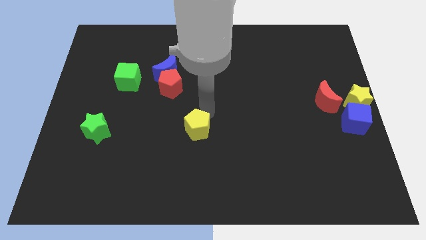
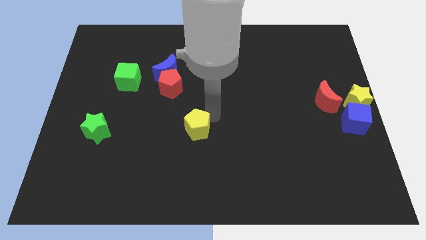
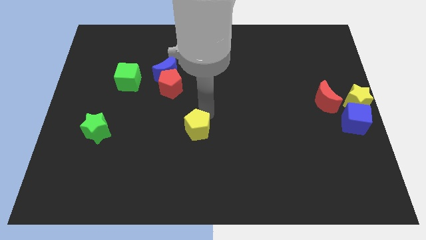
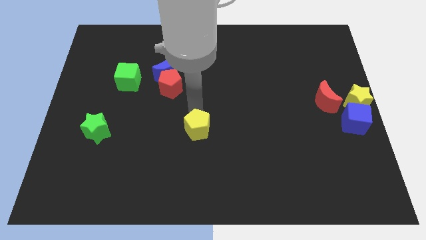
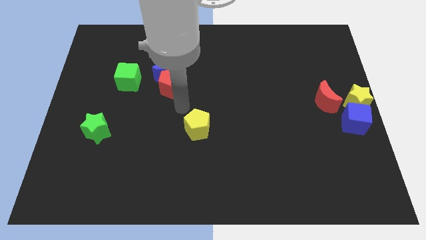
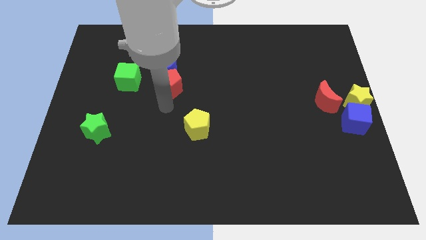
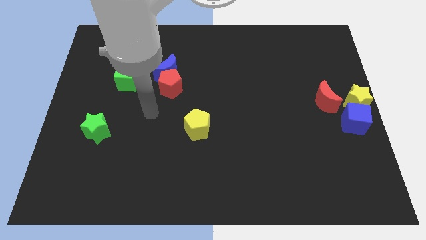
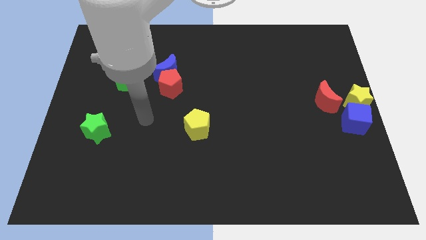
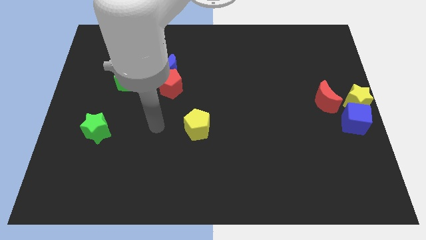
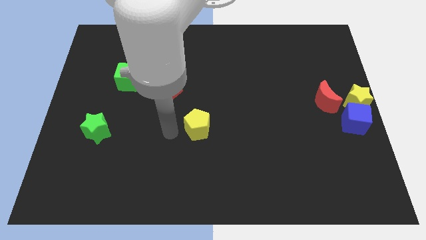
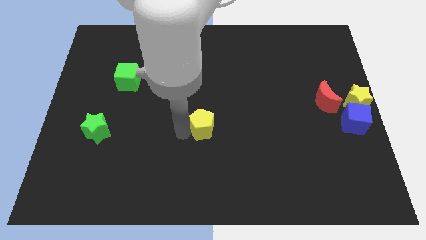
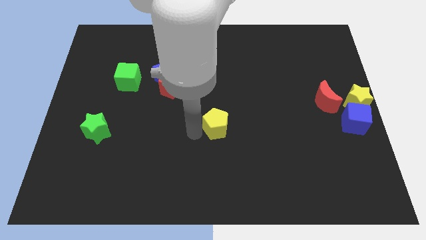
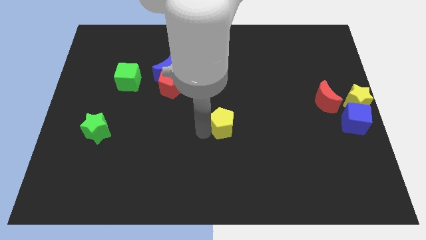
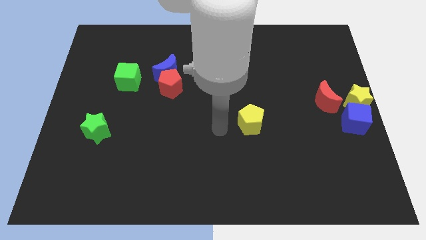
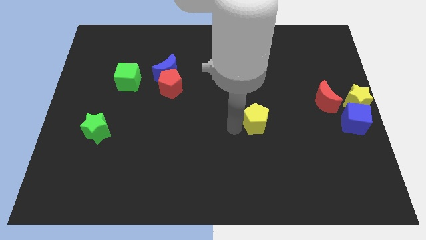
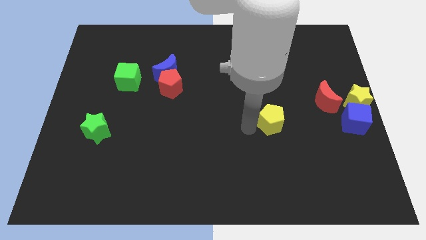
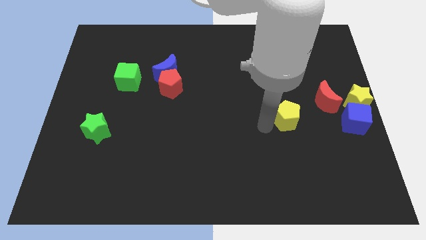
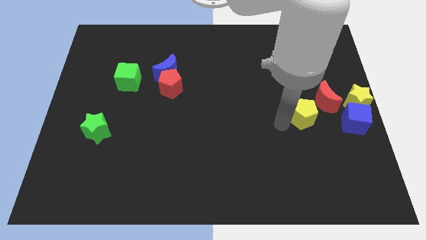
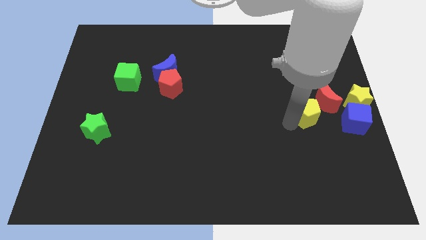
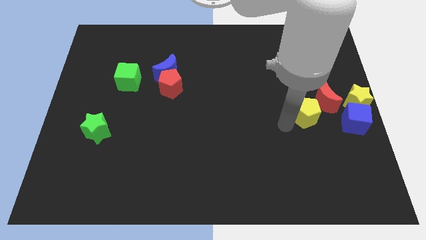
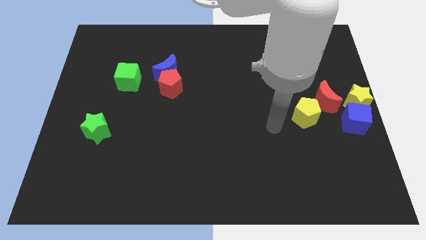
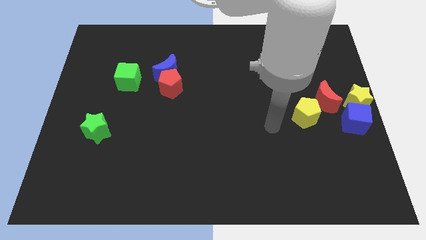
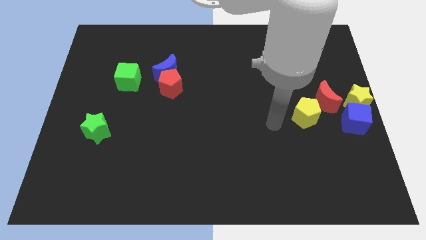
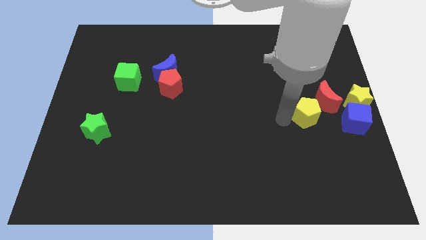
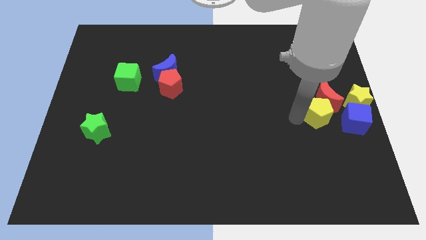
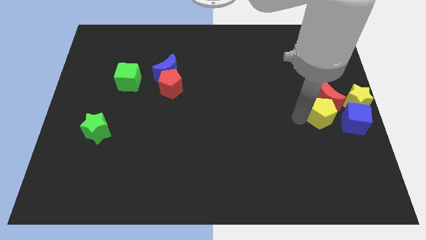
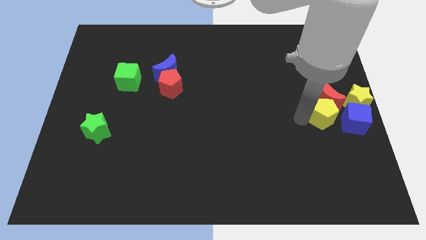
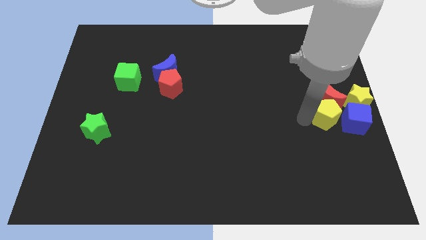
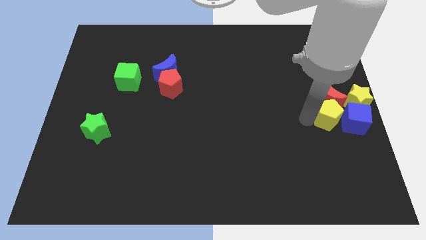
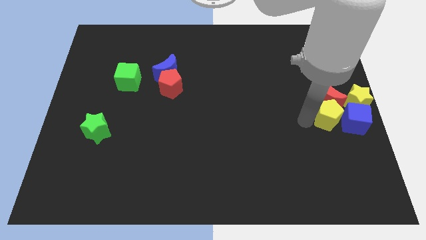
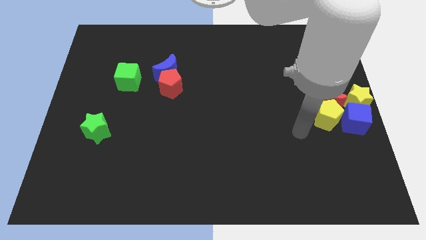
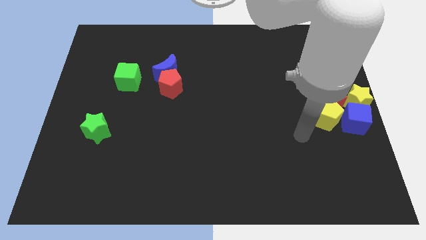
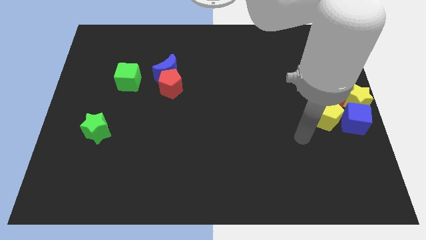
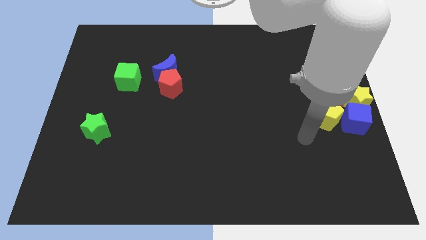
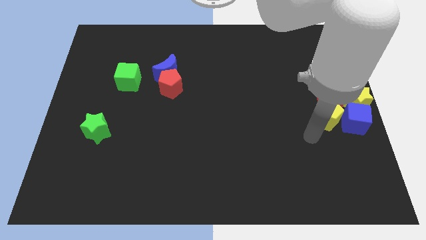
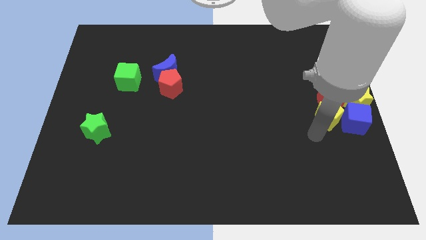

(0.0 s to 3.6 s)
push the yellow pentagon into the red crescent

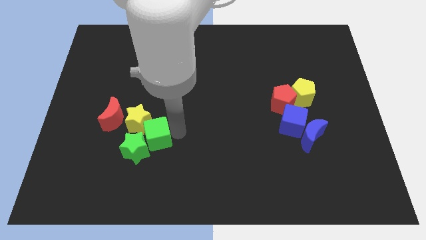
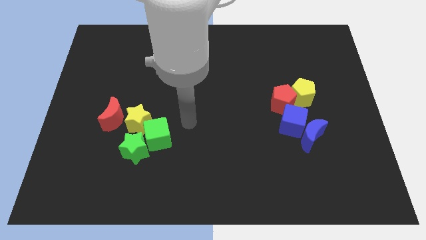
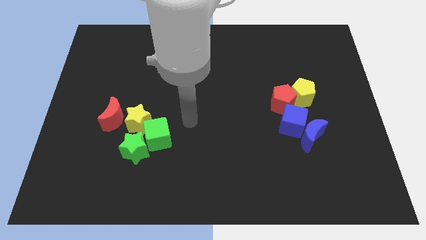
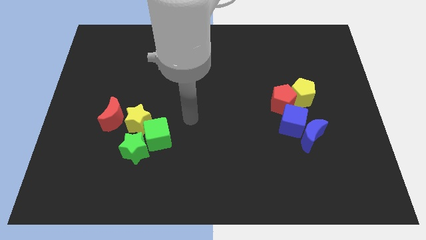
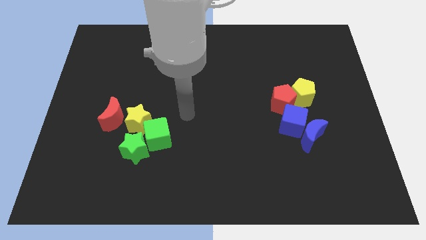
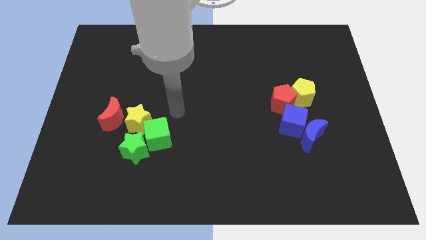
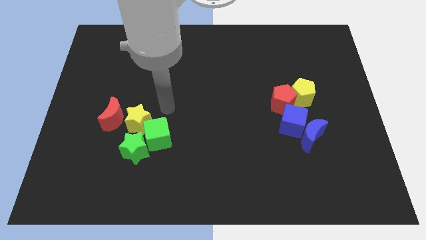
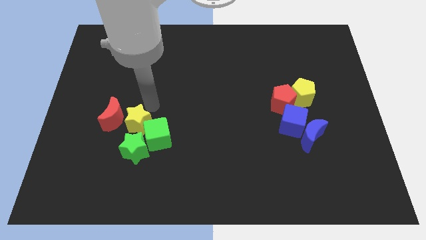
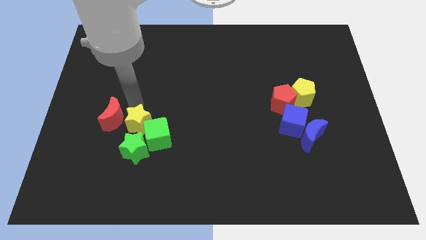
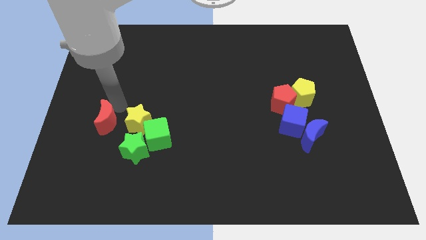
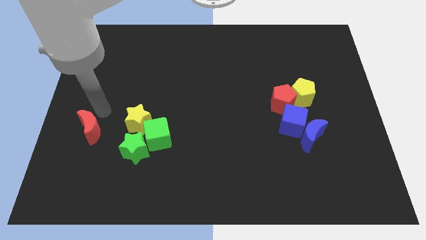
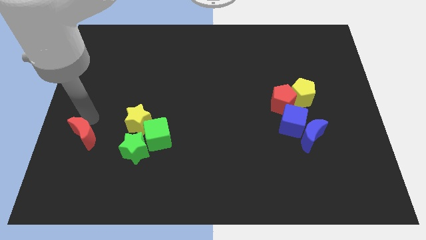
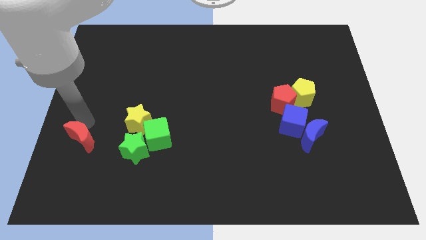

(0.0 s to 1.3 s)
slightly push the red moon towards the left side

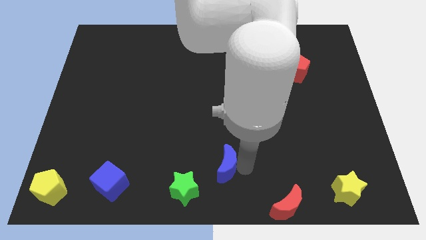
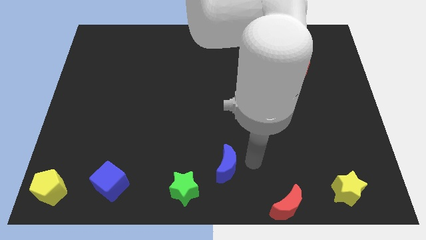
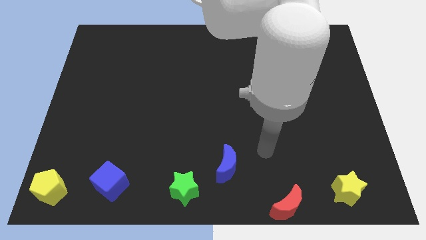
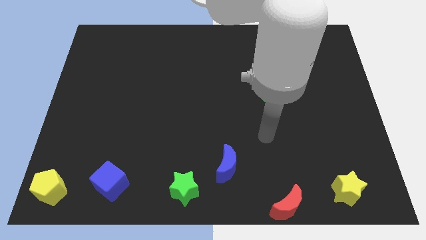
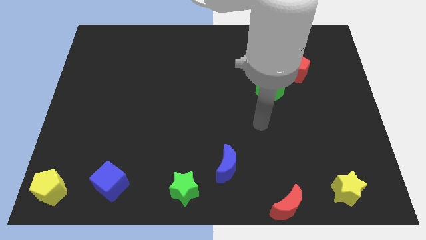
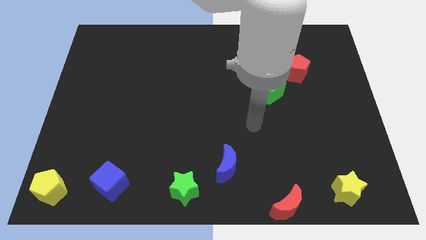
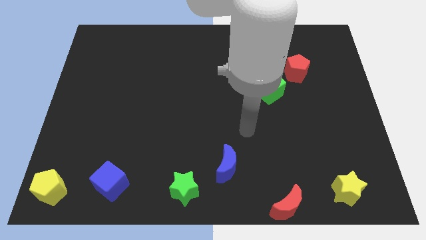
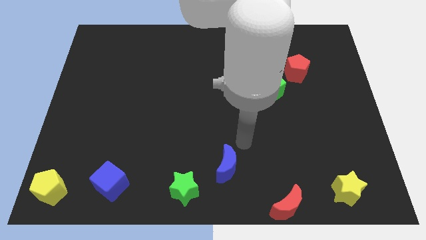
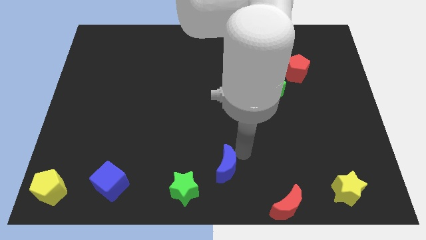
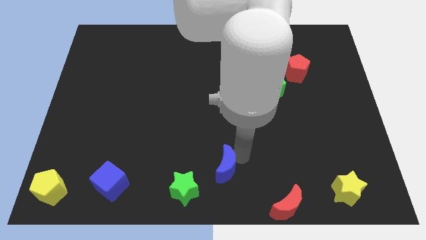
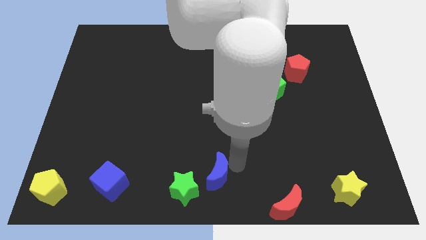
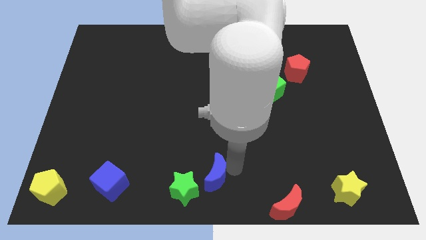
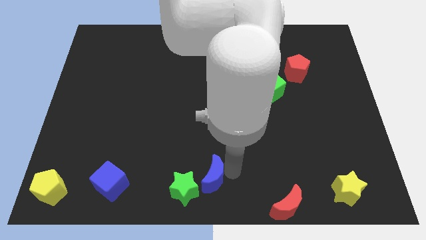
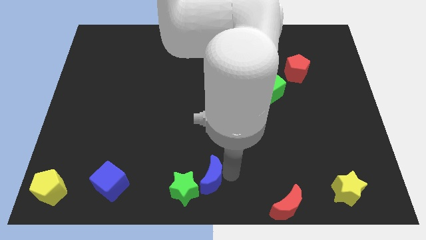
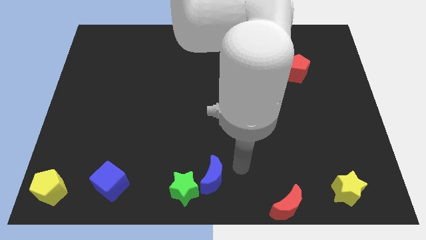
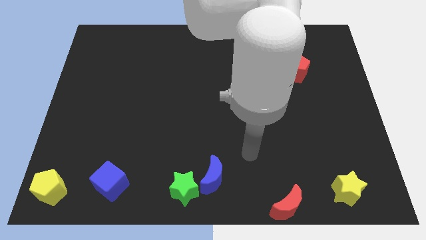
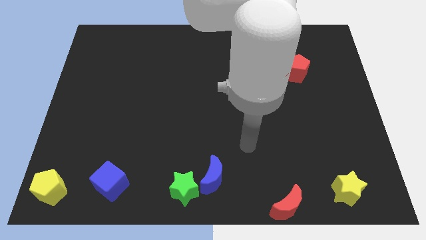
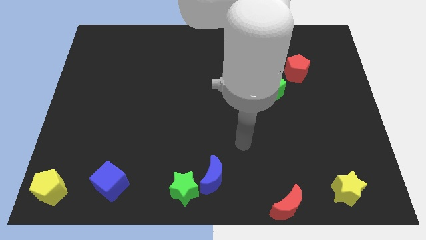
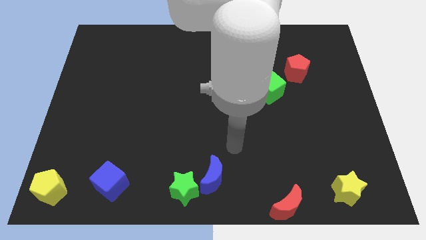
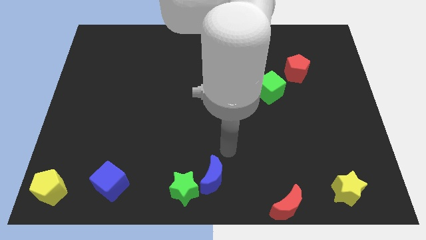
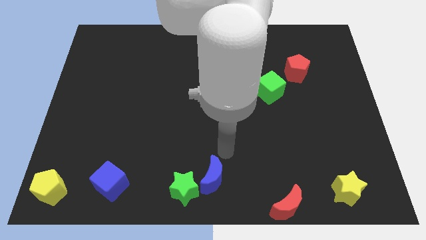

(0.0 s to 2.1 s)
slide blue moon into green star

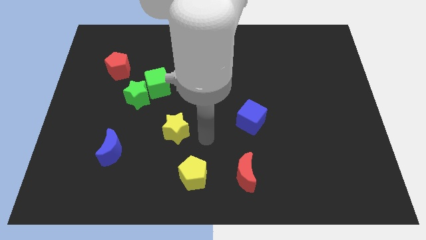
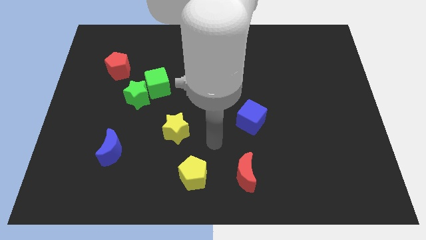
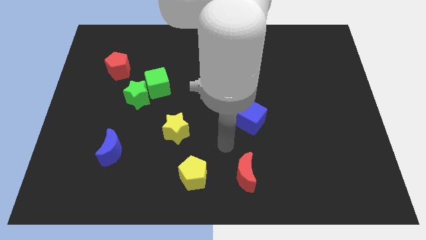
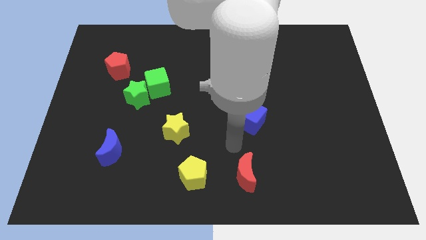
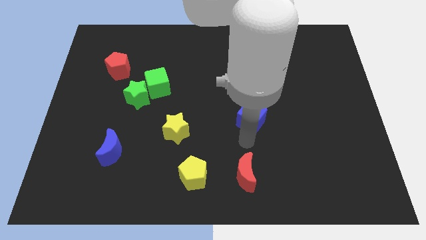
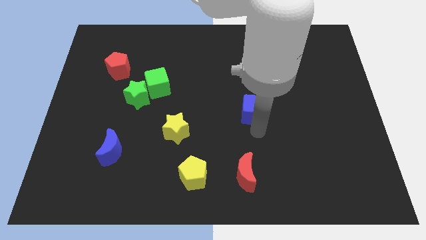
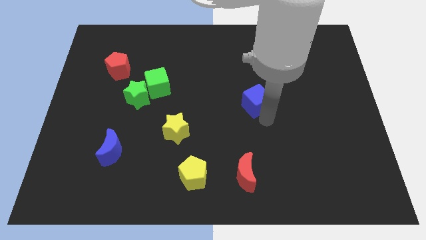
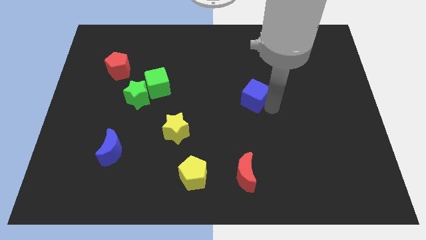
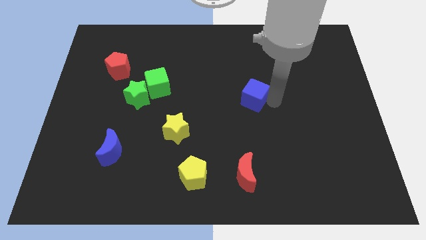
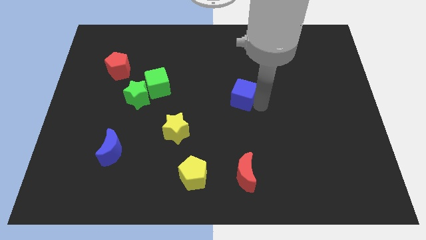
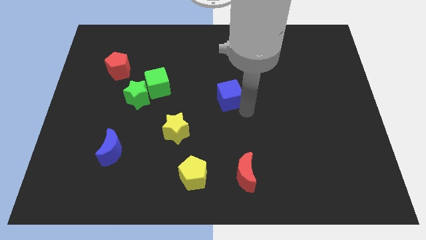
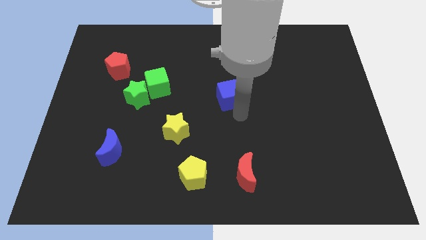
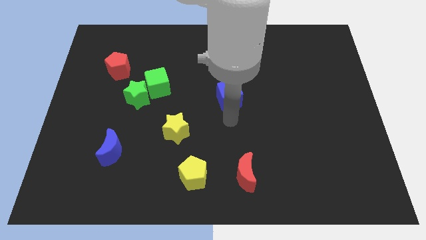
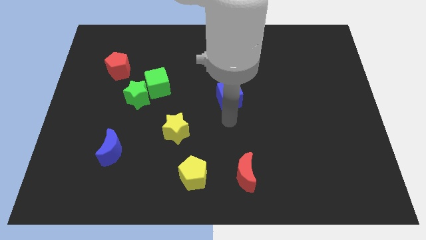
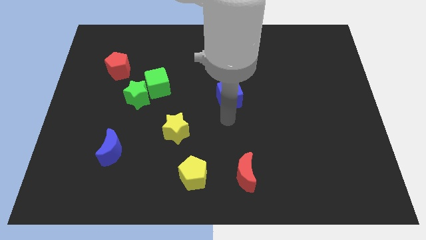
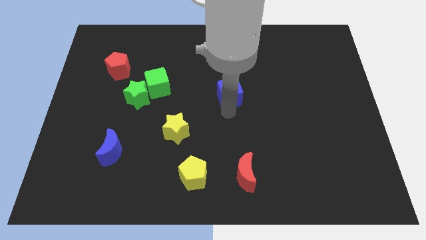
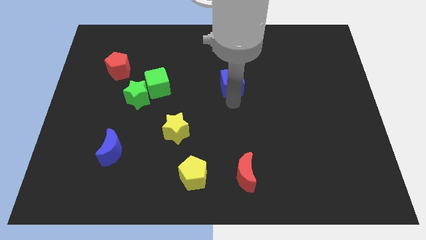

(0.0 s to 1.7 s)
push blue cube slightly upwards

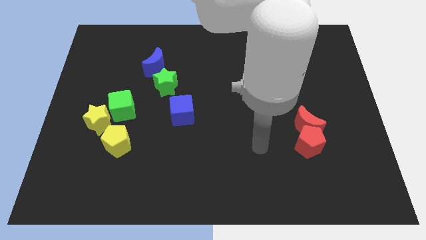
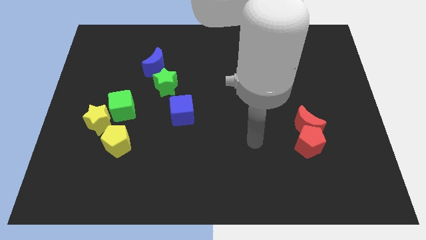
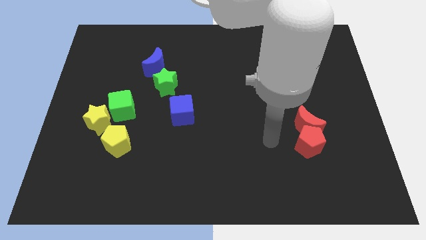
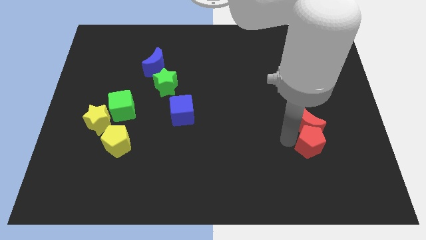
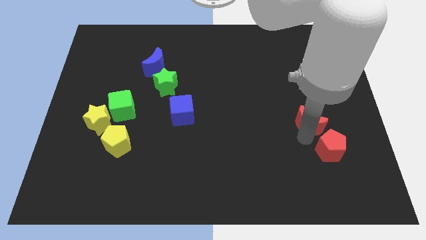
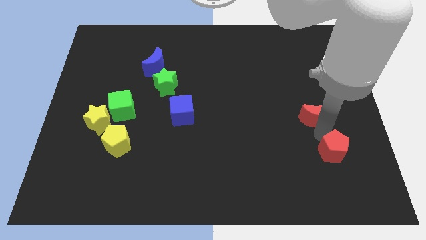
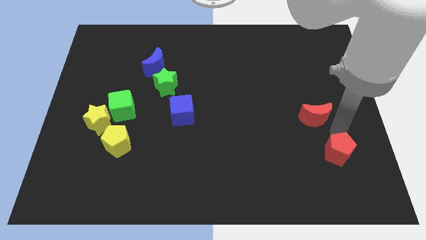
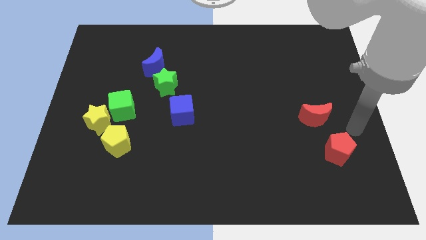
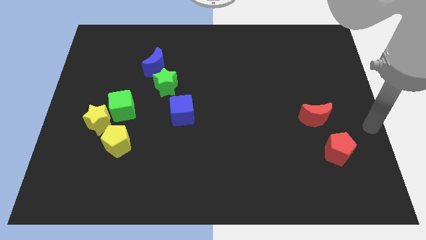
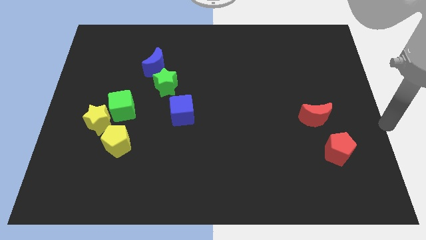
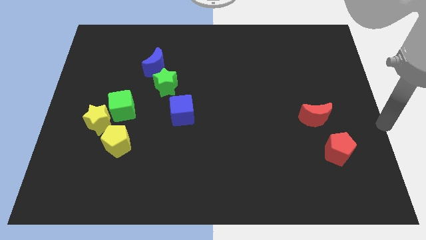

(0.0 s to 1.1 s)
seperate red moon and red pentagon
